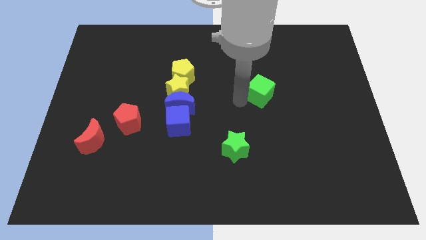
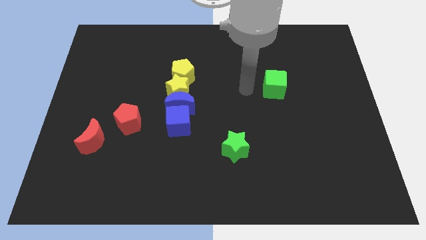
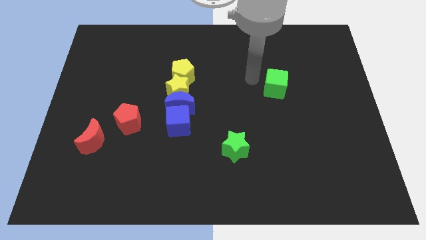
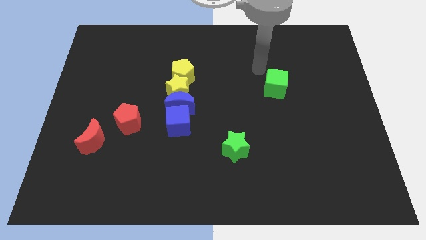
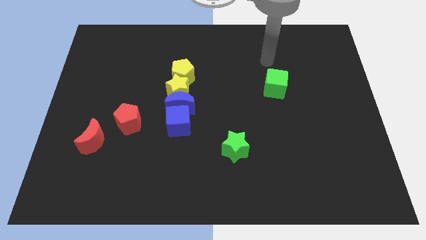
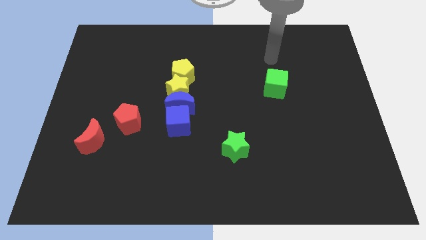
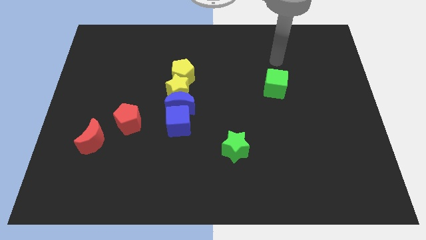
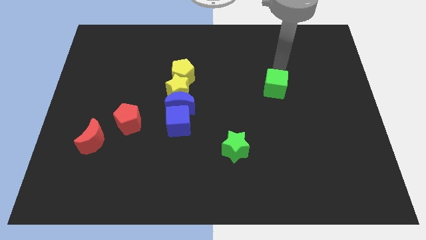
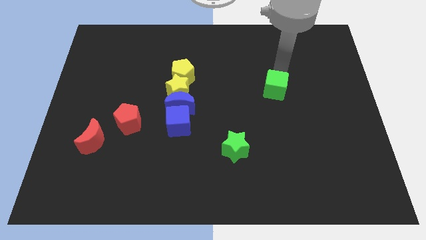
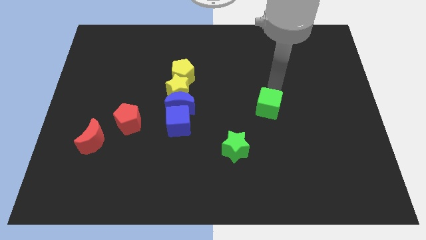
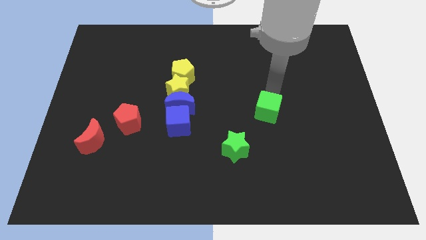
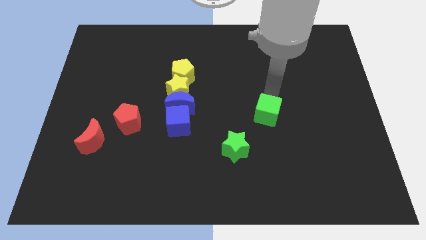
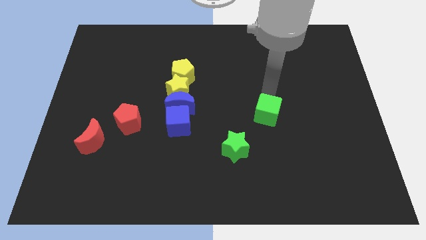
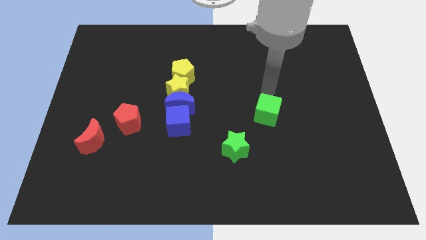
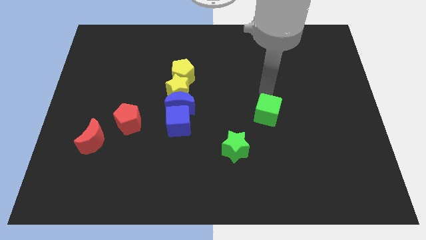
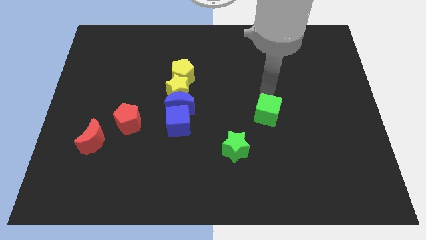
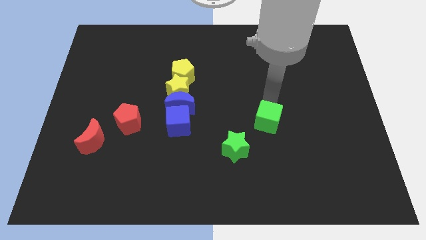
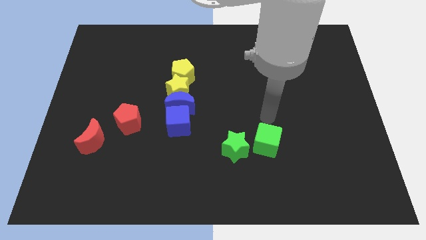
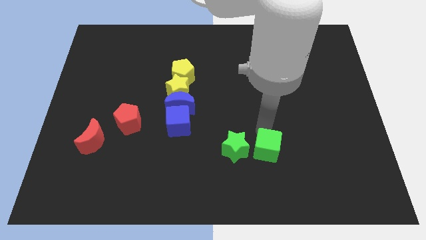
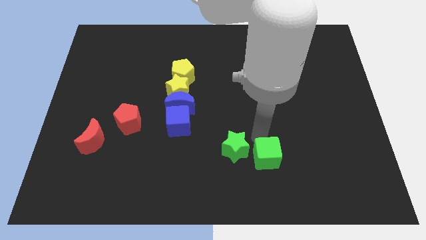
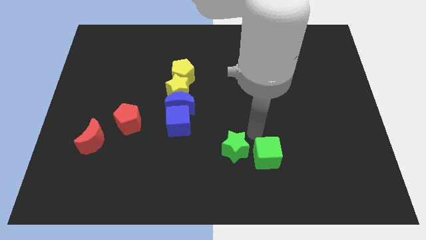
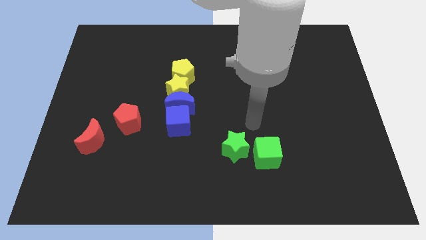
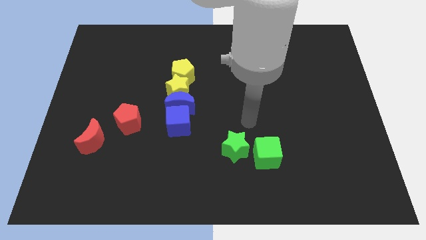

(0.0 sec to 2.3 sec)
place green cube beside green star

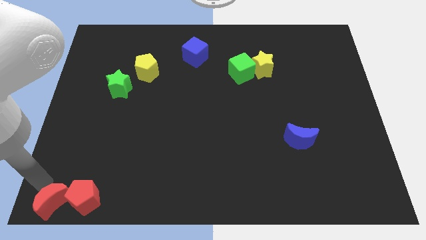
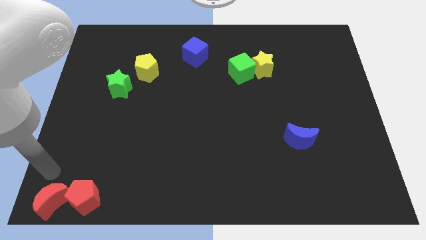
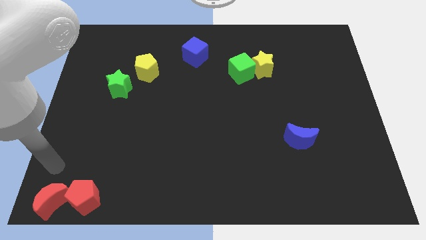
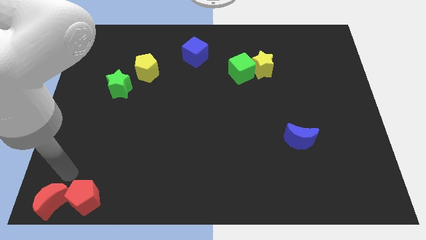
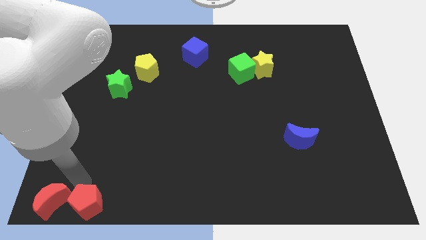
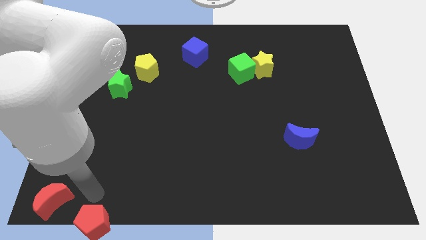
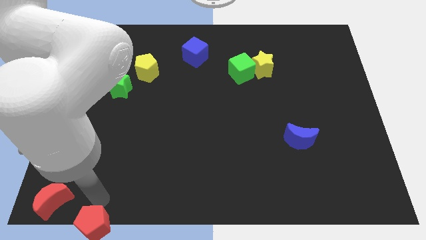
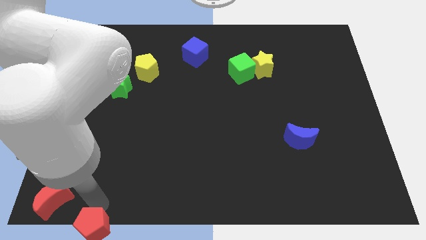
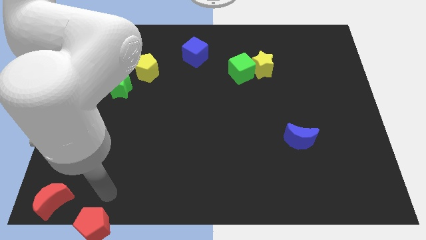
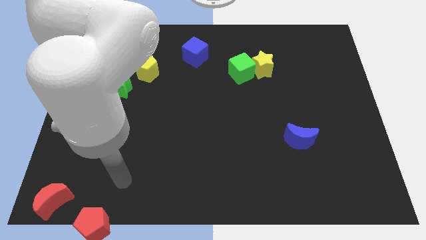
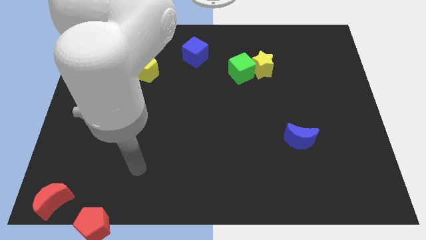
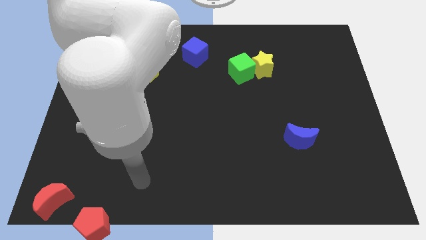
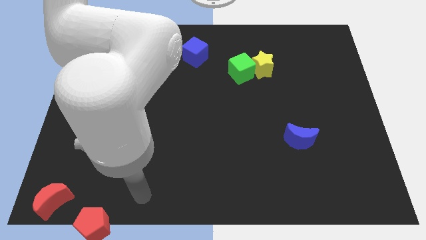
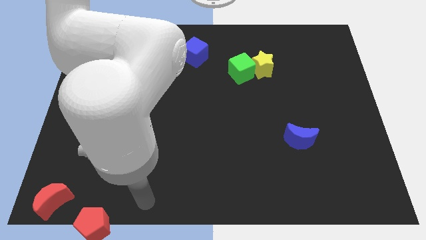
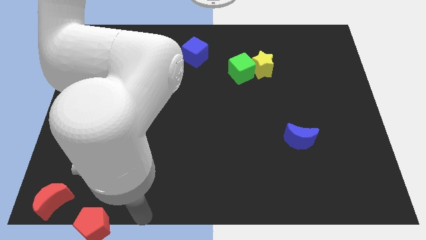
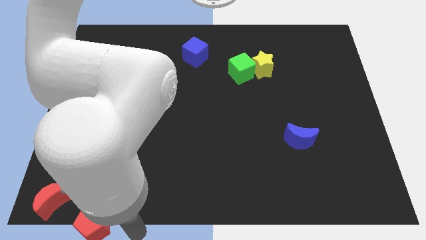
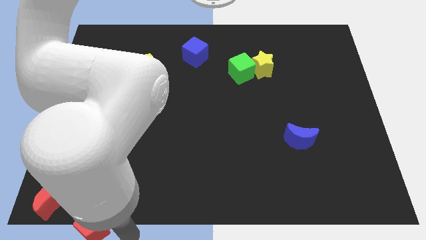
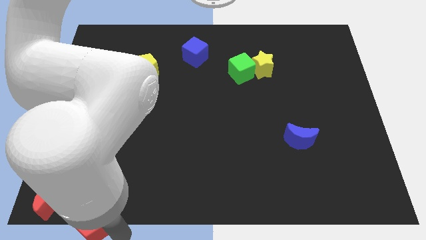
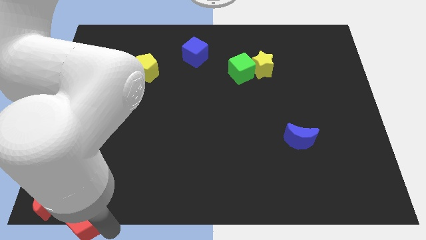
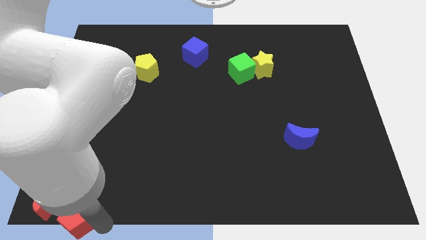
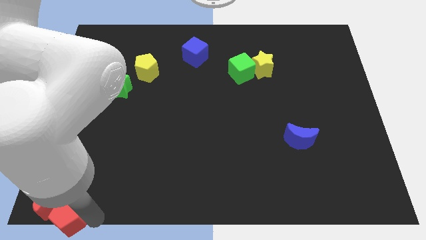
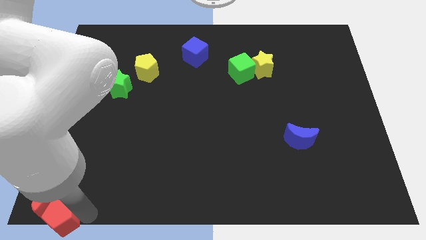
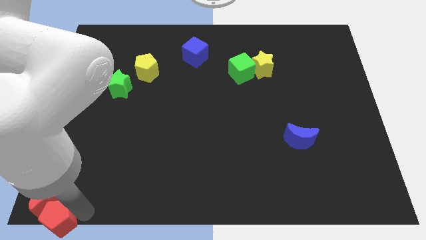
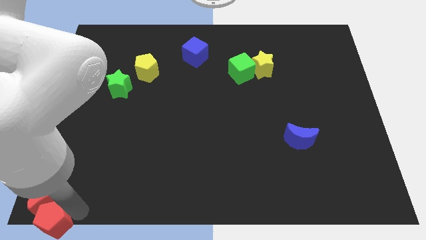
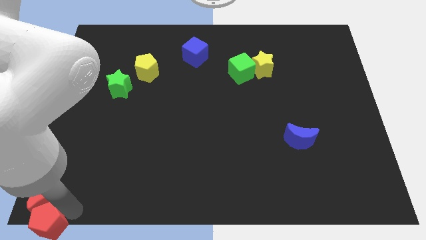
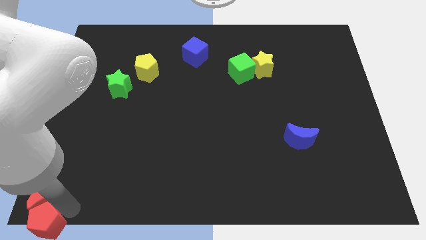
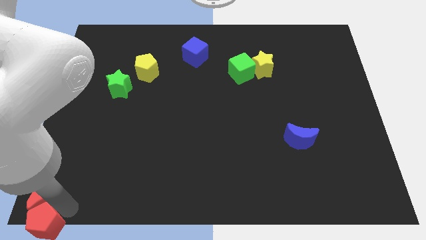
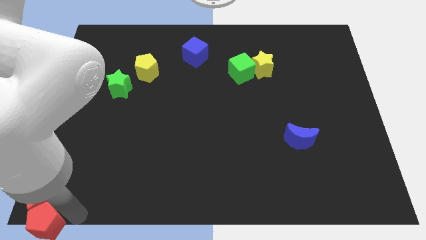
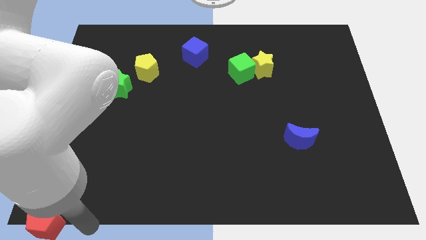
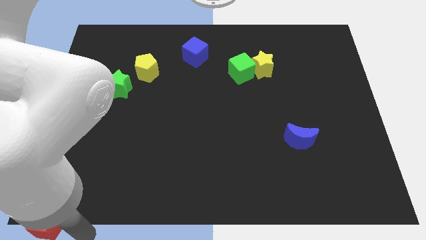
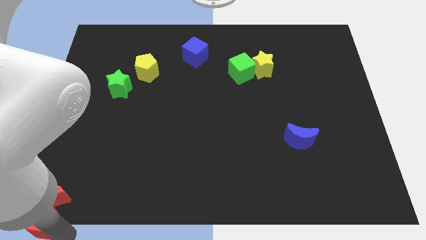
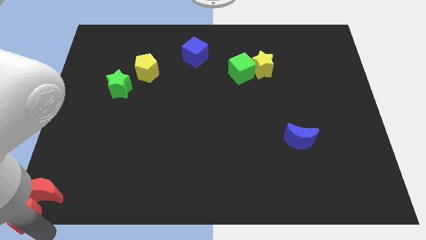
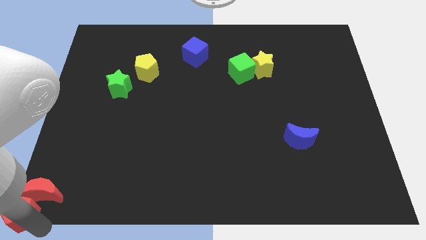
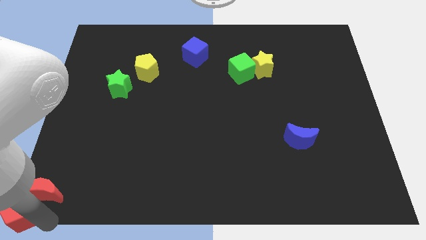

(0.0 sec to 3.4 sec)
push the red blocks to the bottom left corner

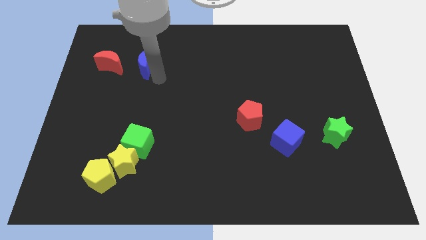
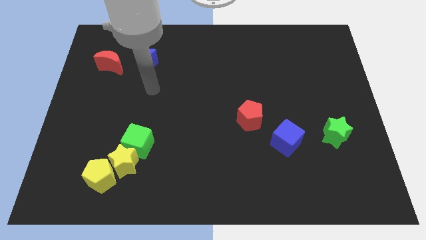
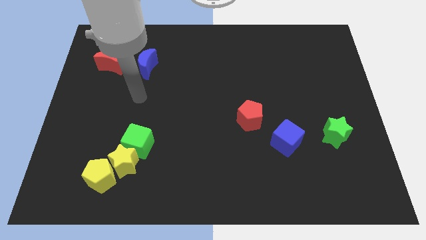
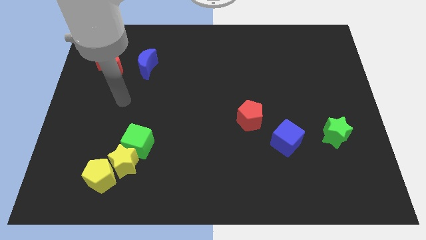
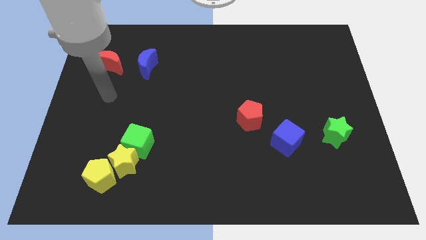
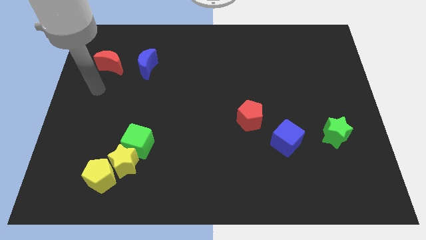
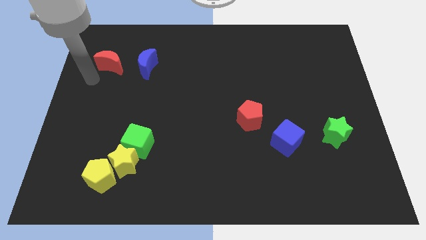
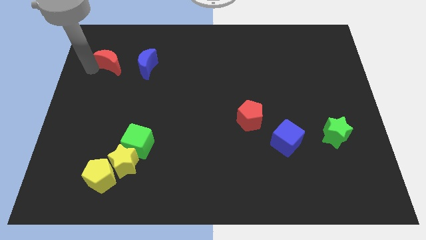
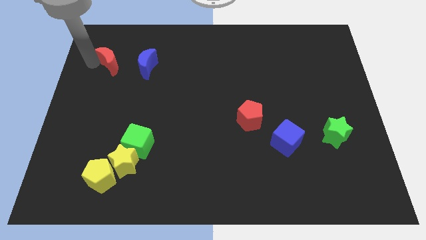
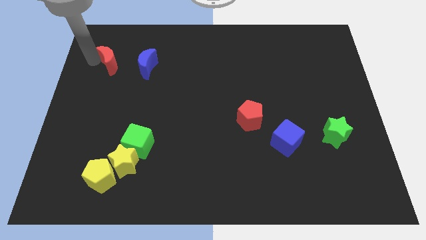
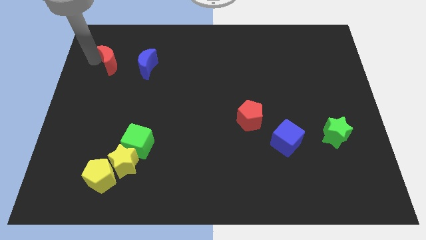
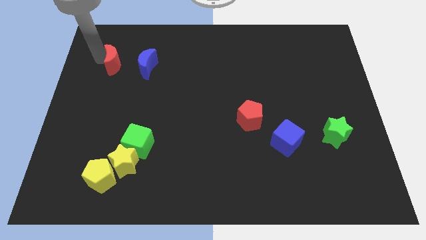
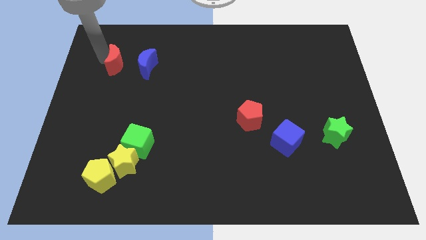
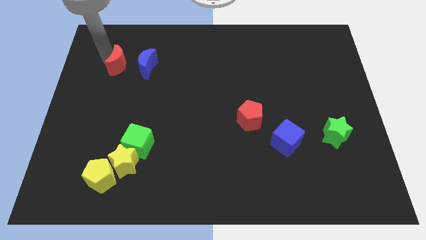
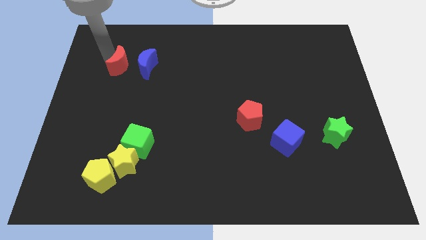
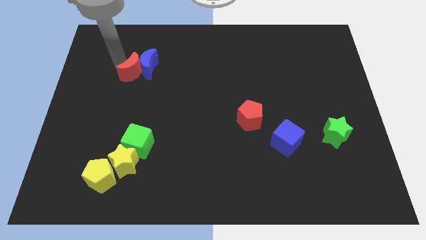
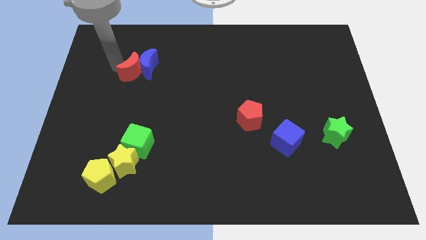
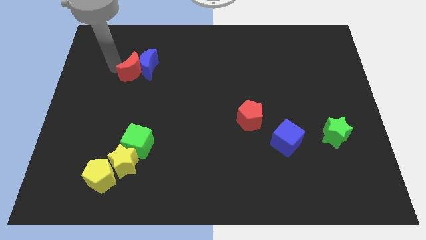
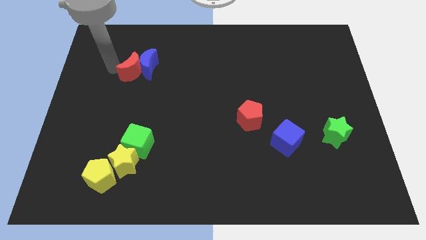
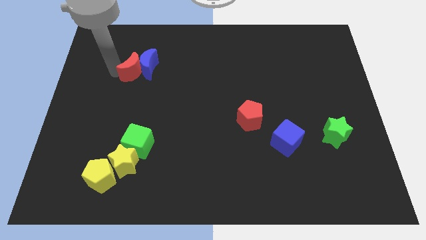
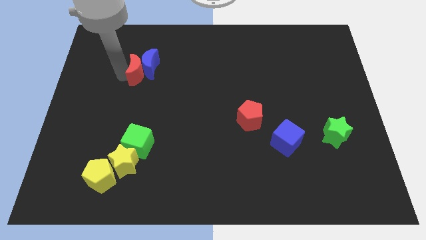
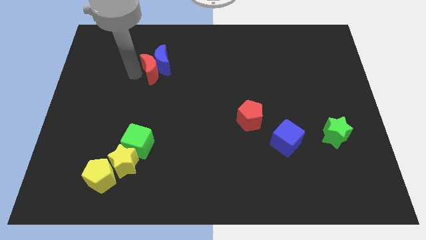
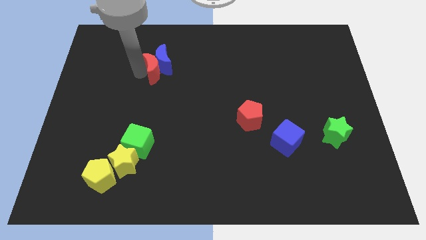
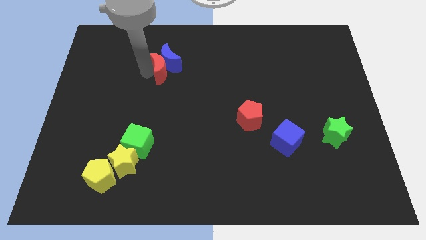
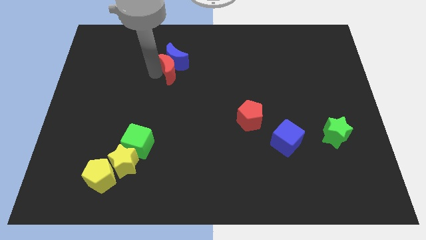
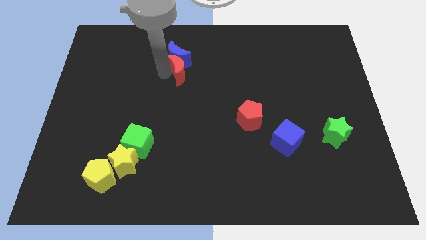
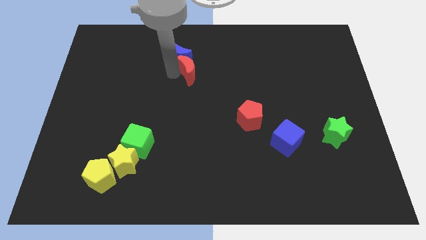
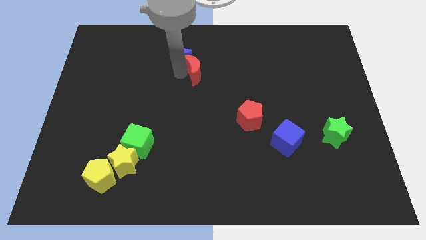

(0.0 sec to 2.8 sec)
push the red crescent to the bottom of the blue crescent

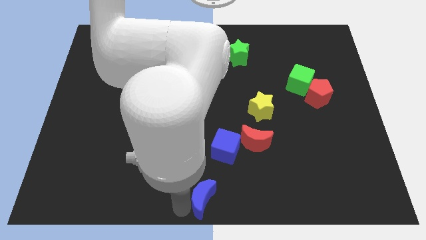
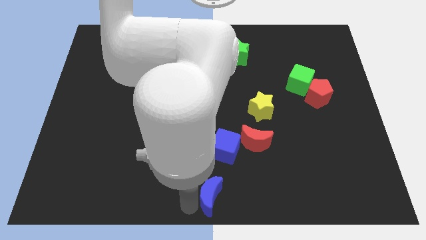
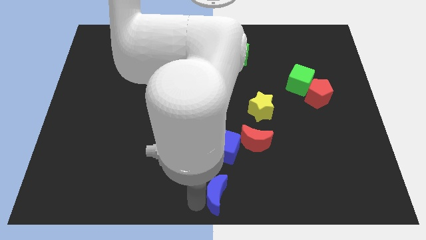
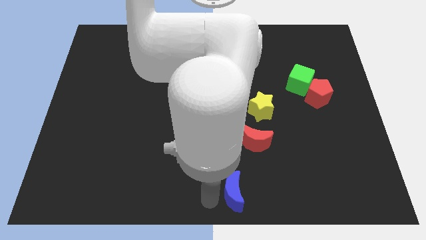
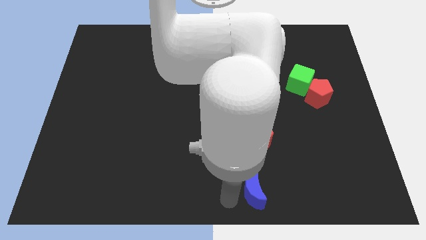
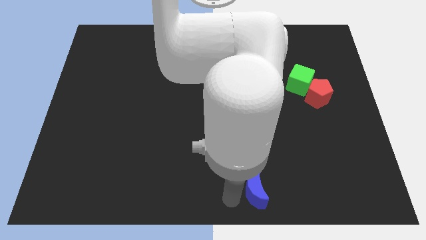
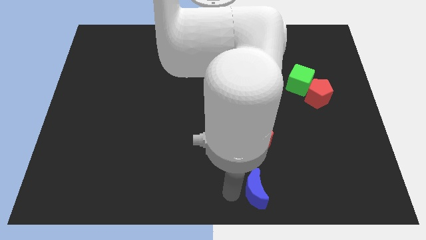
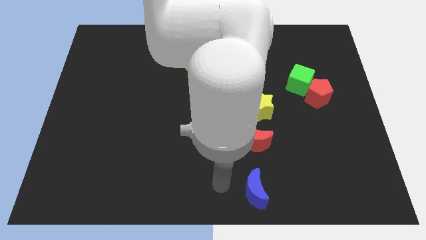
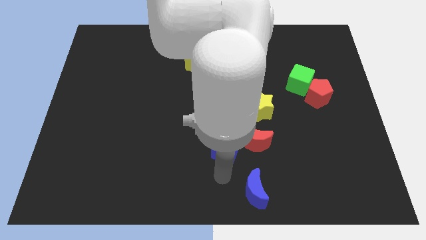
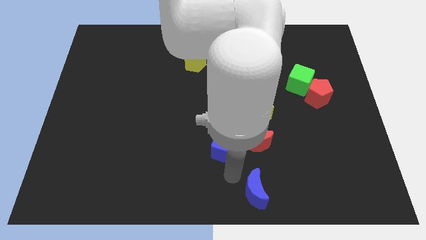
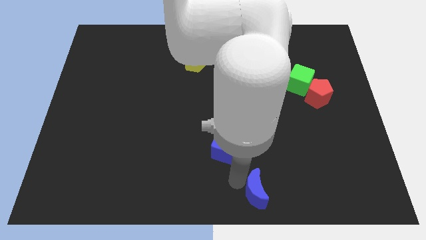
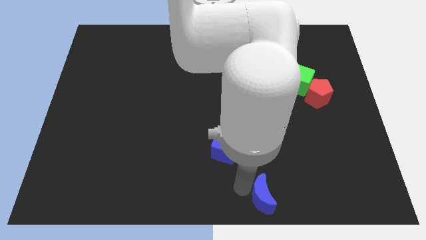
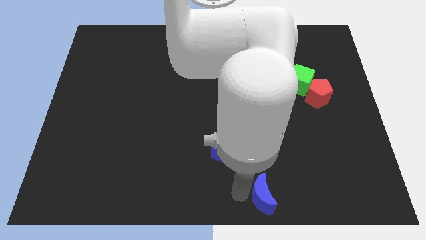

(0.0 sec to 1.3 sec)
slide the blue moon diagonally bottom right to the blue cube
